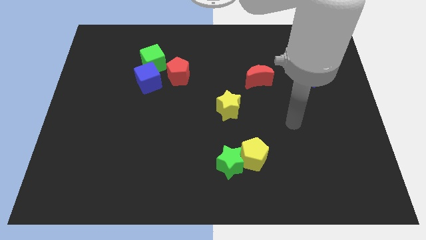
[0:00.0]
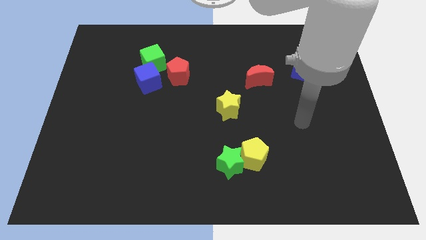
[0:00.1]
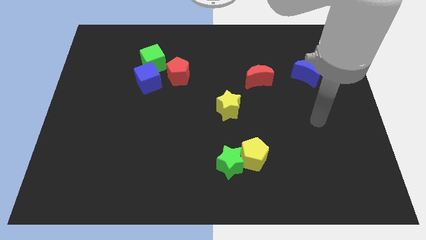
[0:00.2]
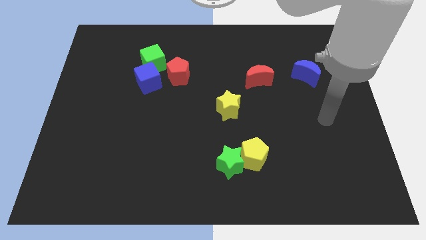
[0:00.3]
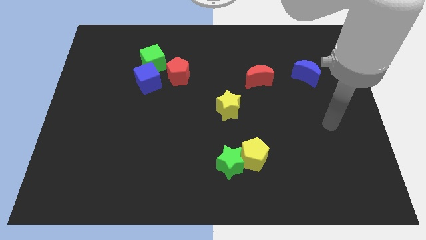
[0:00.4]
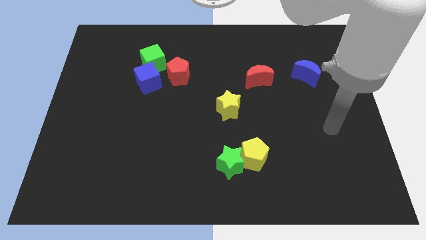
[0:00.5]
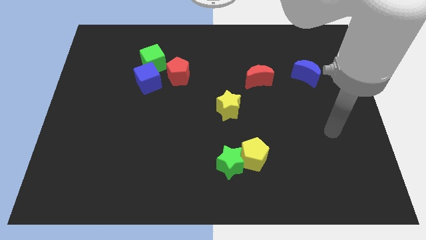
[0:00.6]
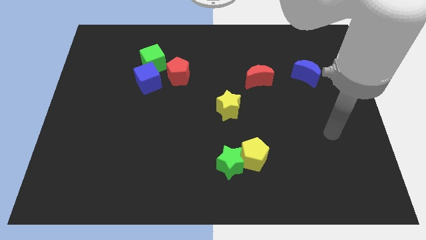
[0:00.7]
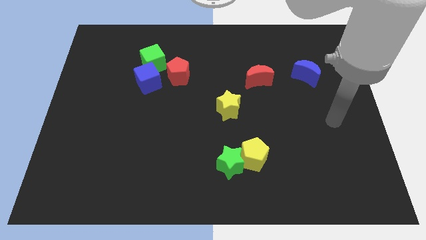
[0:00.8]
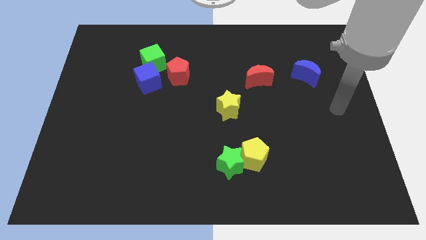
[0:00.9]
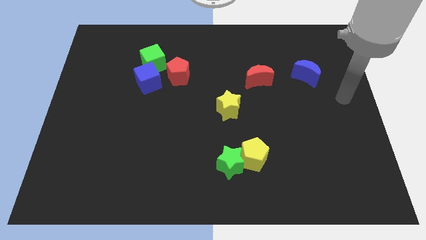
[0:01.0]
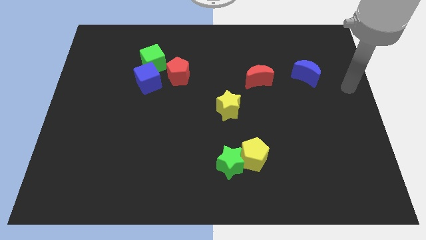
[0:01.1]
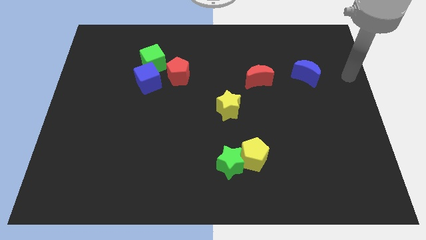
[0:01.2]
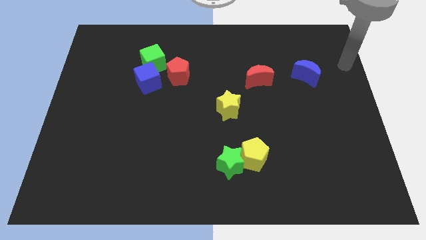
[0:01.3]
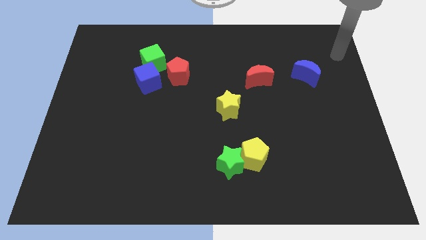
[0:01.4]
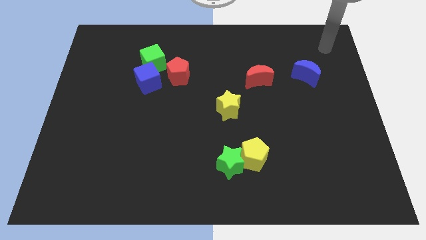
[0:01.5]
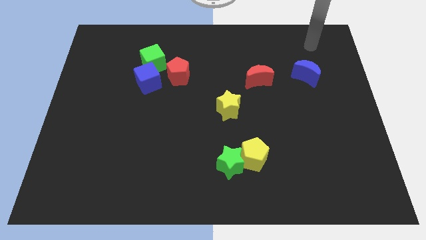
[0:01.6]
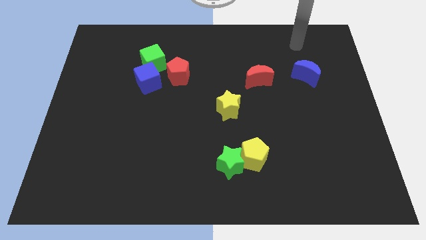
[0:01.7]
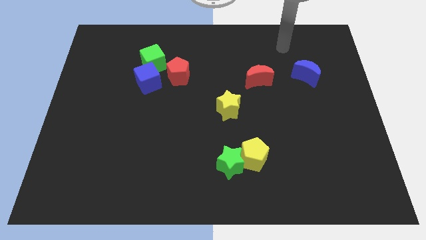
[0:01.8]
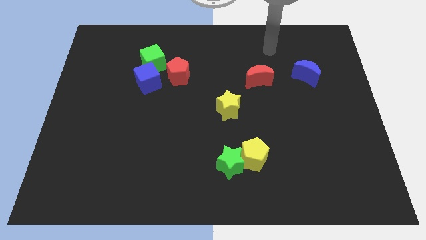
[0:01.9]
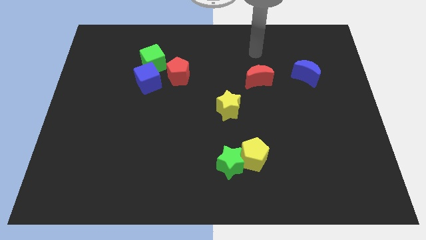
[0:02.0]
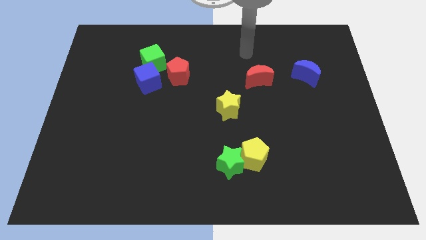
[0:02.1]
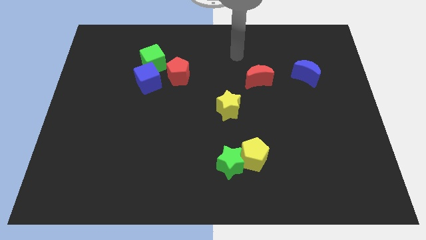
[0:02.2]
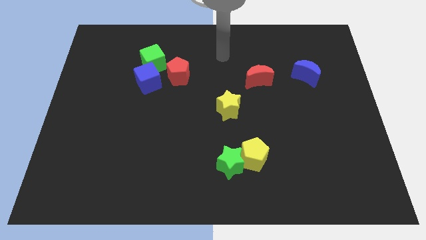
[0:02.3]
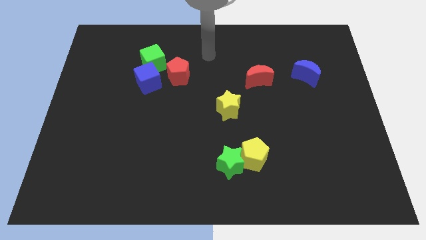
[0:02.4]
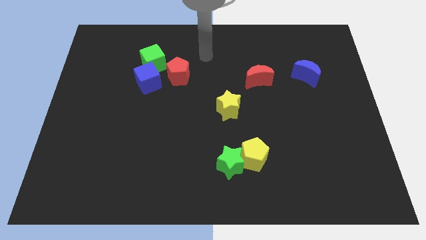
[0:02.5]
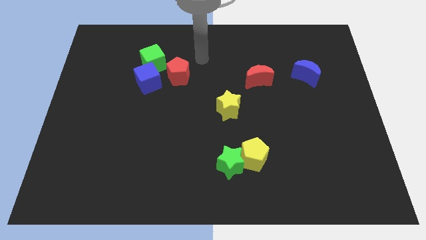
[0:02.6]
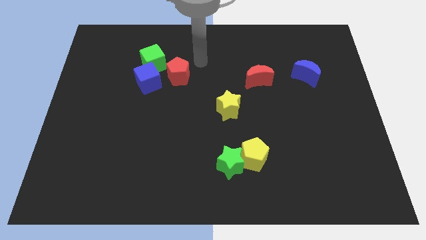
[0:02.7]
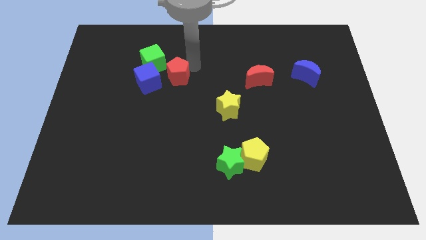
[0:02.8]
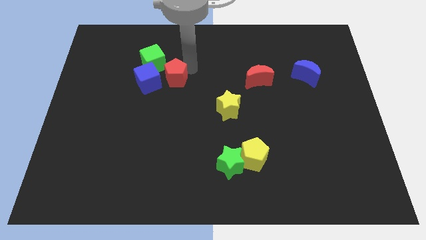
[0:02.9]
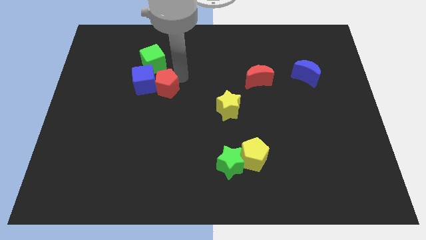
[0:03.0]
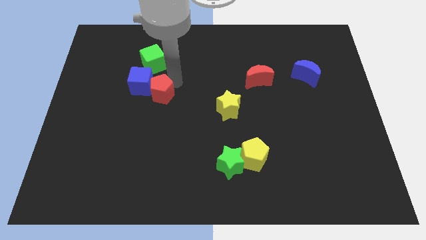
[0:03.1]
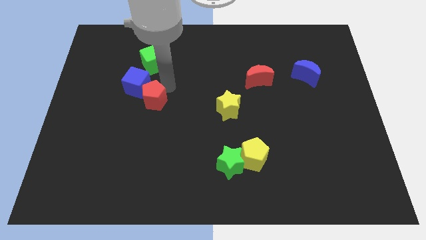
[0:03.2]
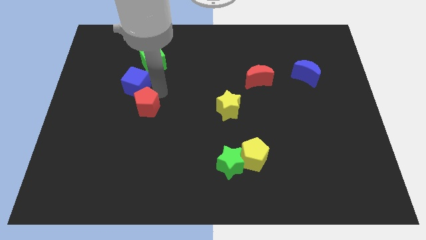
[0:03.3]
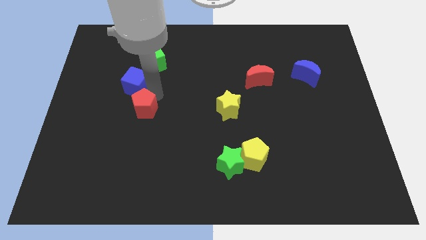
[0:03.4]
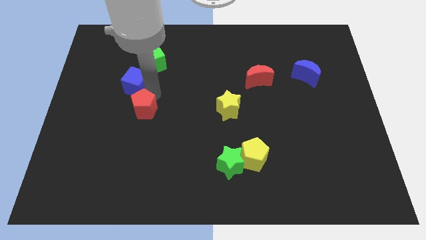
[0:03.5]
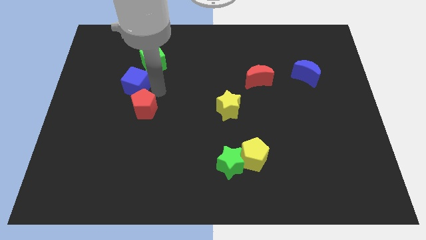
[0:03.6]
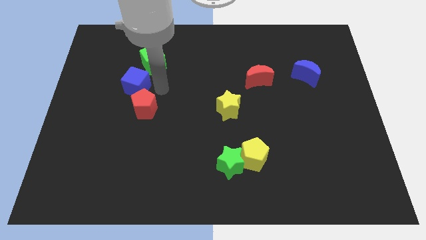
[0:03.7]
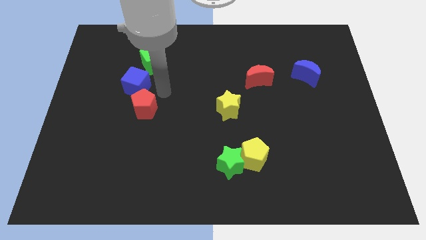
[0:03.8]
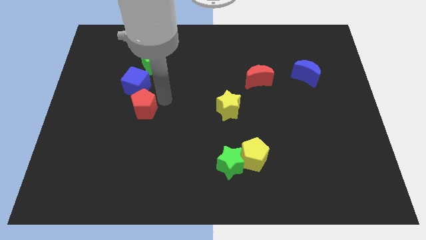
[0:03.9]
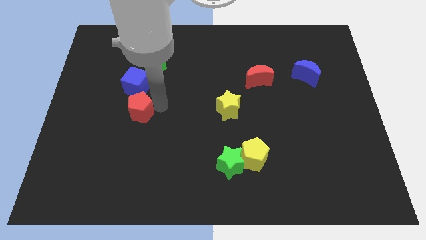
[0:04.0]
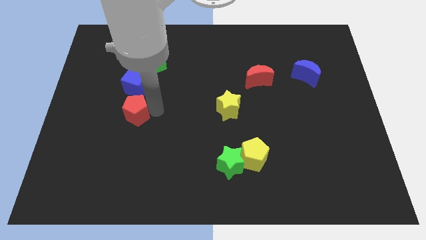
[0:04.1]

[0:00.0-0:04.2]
push the red pentagon to the bottom of the blue cube

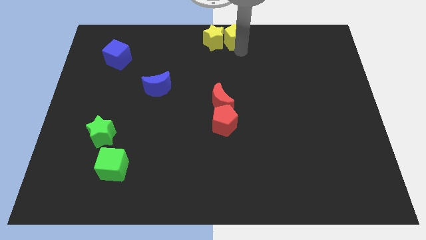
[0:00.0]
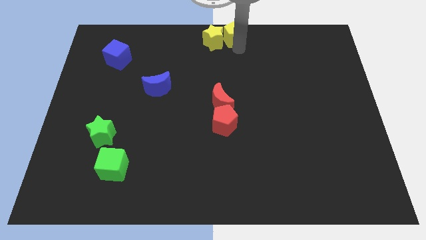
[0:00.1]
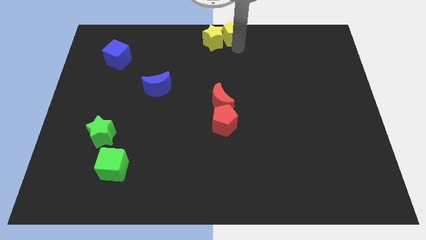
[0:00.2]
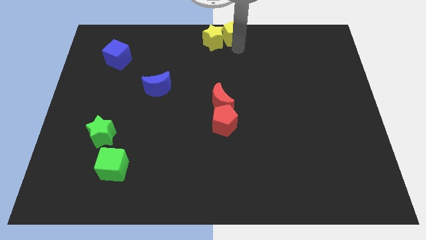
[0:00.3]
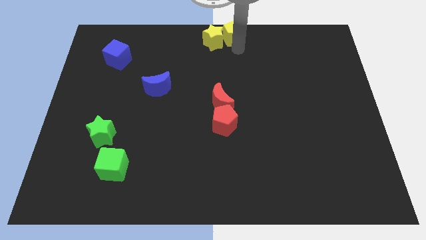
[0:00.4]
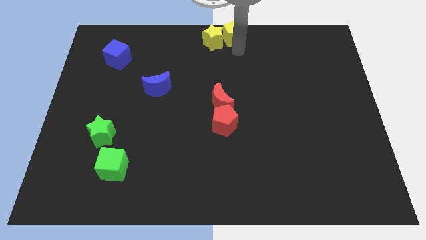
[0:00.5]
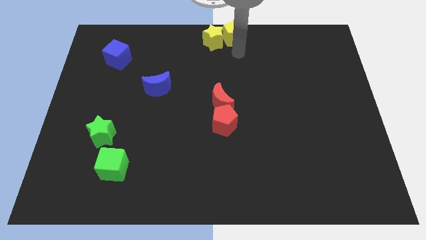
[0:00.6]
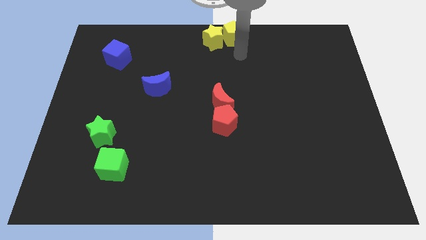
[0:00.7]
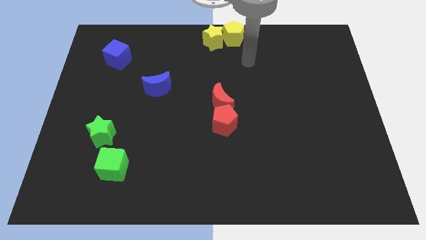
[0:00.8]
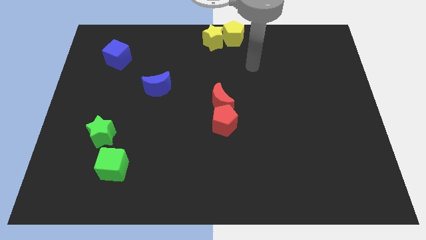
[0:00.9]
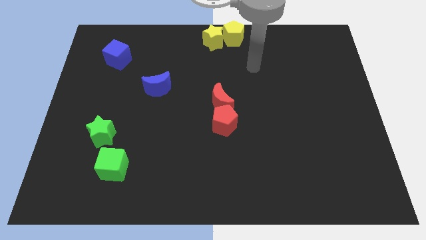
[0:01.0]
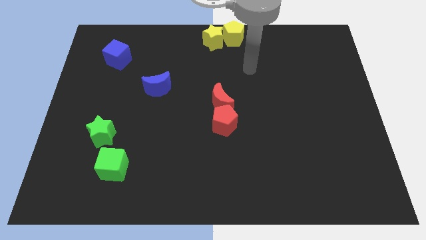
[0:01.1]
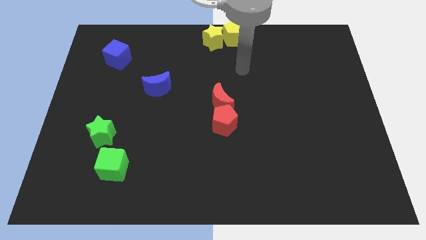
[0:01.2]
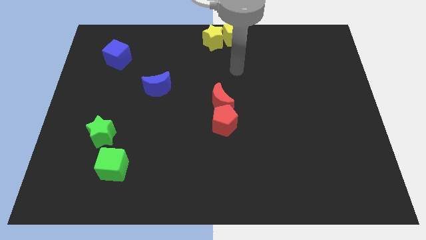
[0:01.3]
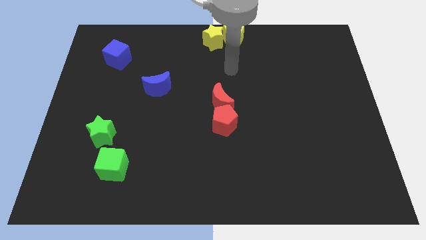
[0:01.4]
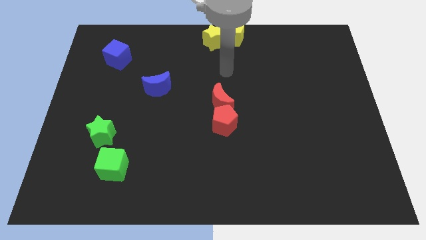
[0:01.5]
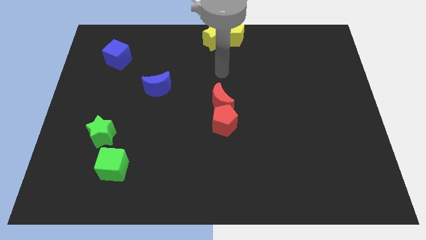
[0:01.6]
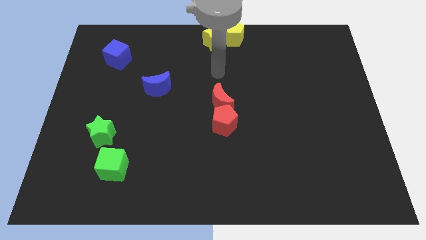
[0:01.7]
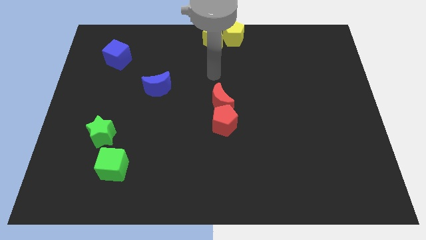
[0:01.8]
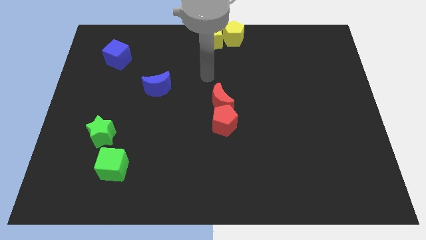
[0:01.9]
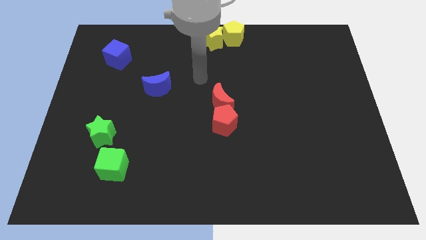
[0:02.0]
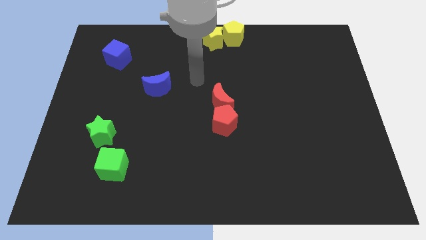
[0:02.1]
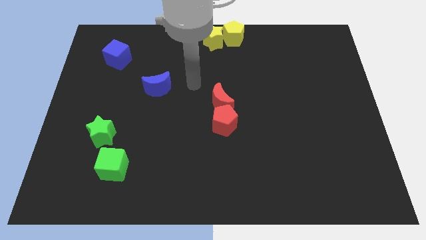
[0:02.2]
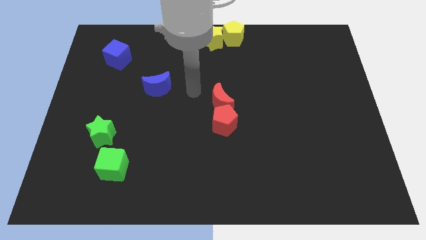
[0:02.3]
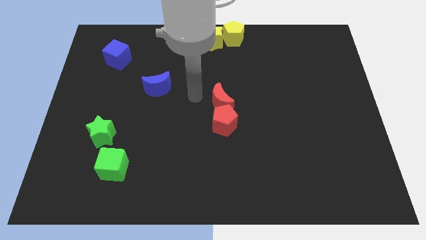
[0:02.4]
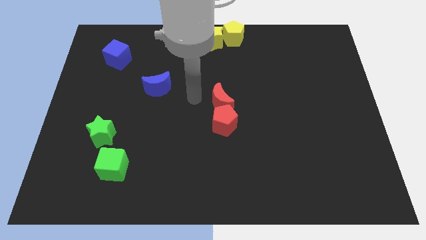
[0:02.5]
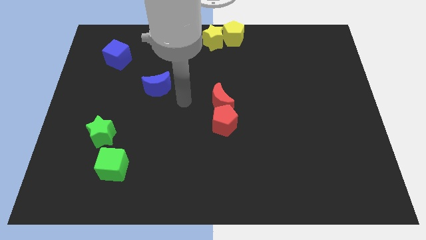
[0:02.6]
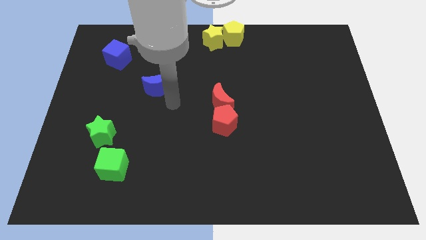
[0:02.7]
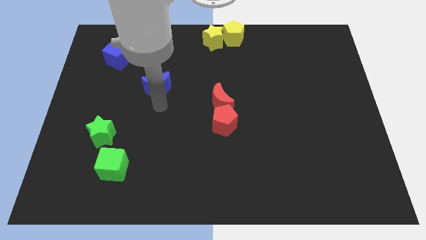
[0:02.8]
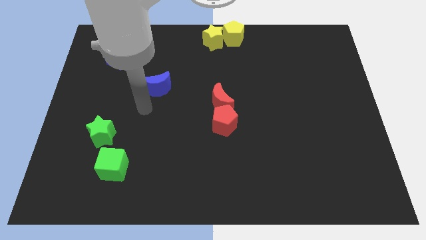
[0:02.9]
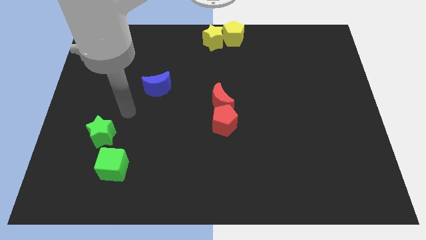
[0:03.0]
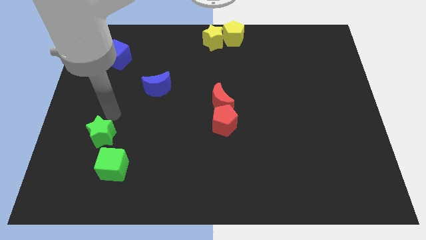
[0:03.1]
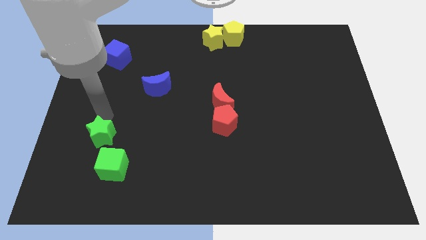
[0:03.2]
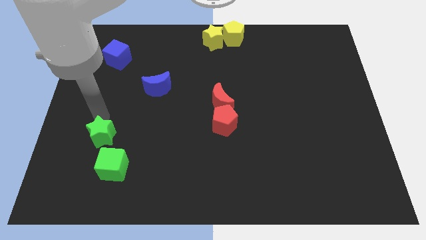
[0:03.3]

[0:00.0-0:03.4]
move your arm towards the green star

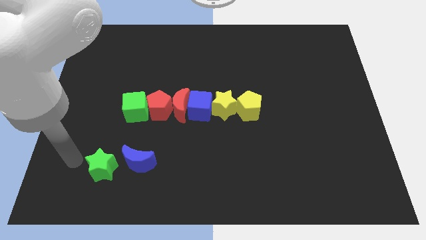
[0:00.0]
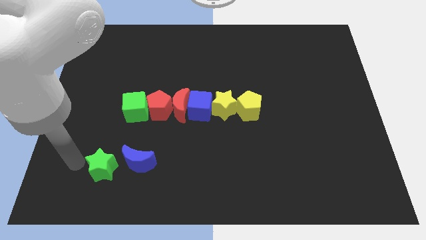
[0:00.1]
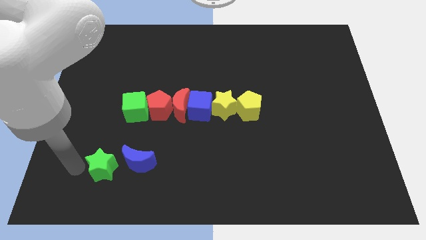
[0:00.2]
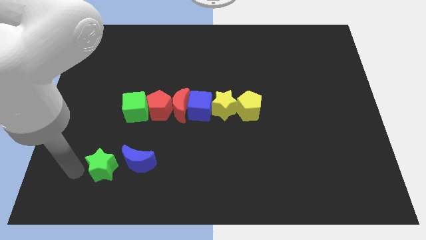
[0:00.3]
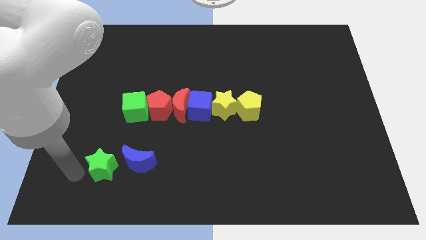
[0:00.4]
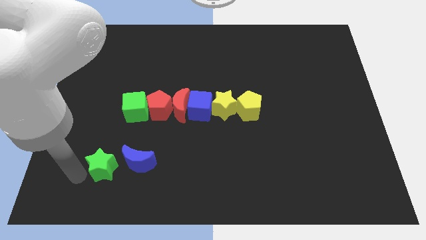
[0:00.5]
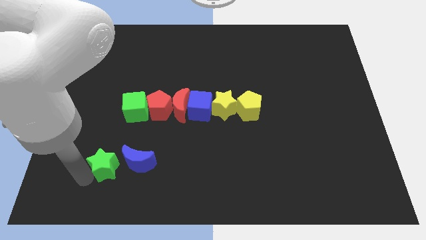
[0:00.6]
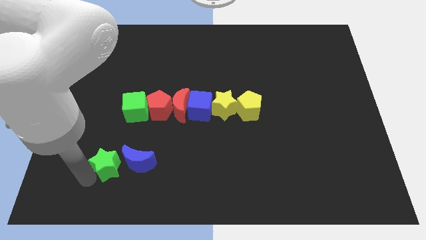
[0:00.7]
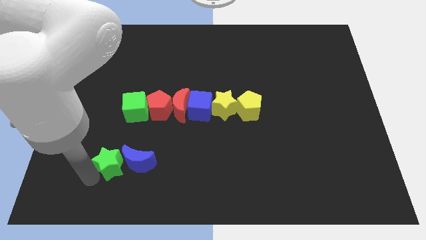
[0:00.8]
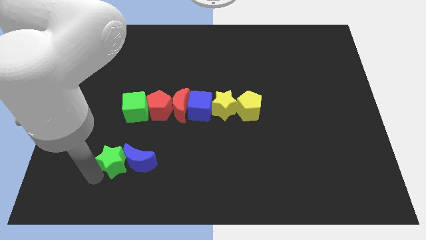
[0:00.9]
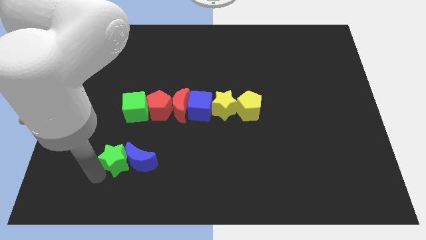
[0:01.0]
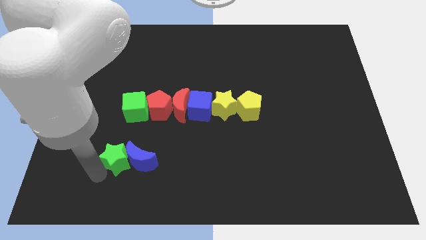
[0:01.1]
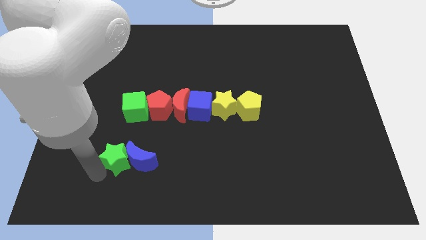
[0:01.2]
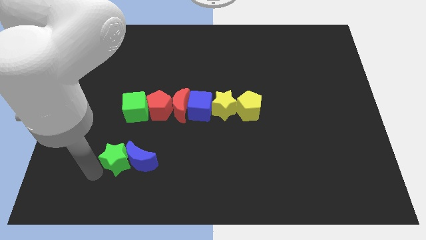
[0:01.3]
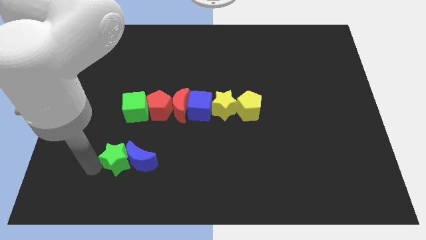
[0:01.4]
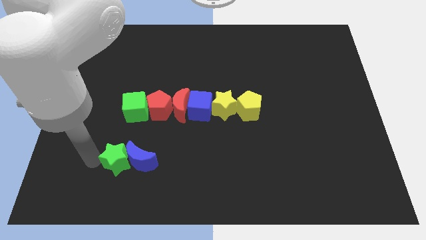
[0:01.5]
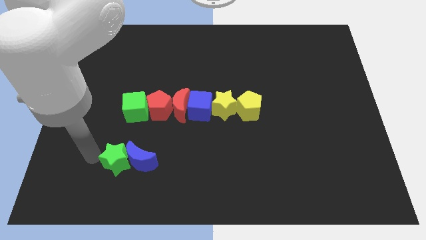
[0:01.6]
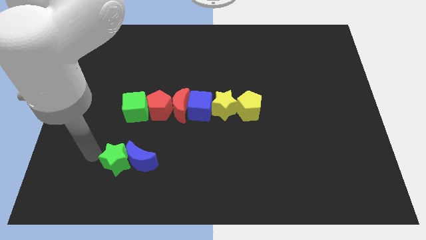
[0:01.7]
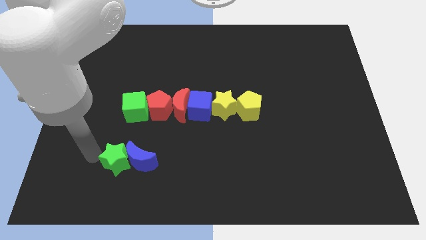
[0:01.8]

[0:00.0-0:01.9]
push the green star into the blue crescent
